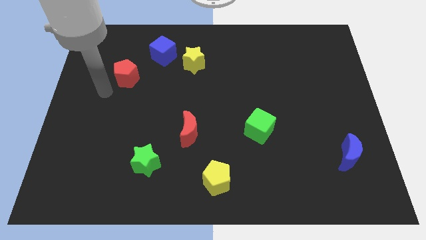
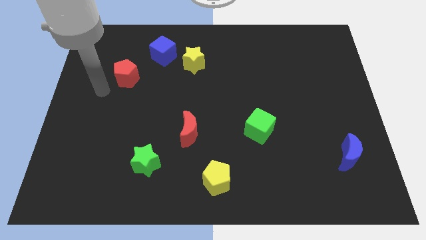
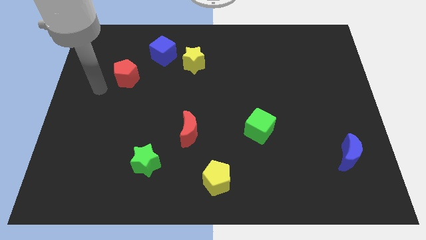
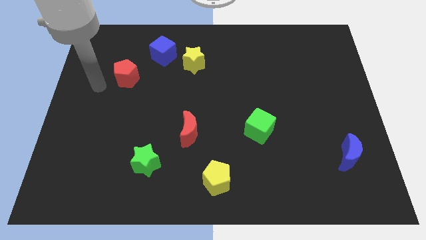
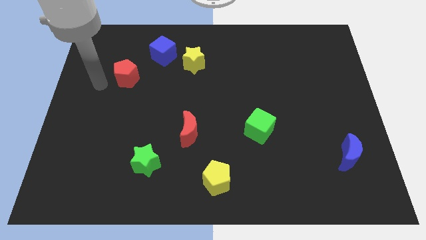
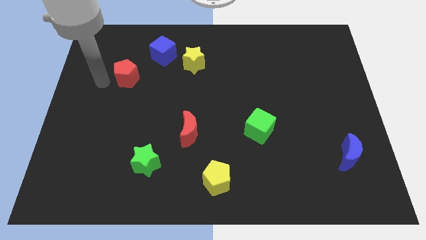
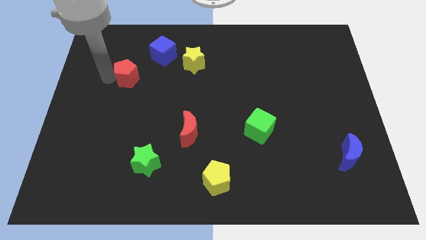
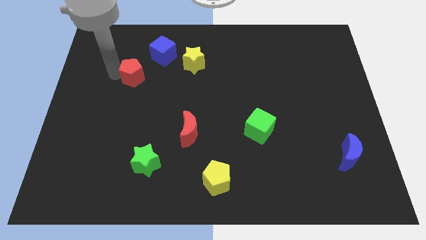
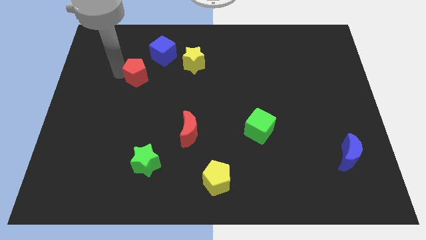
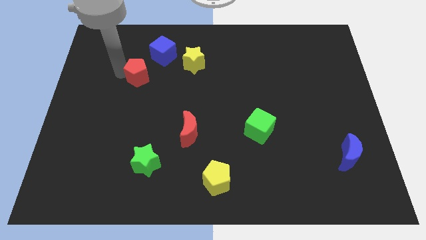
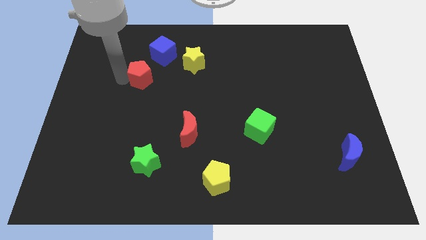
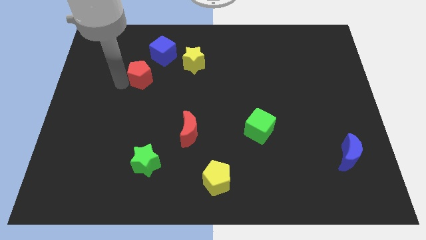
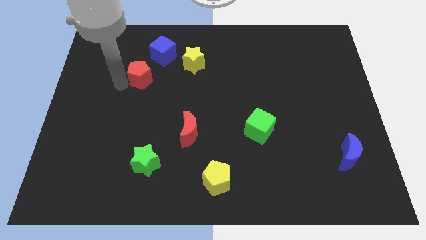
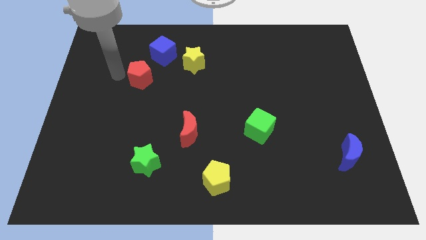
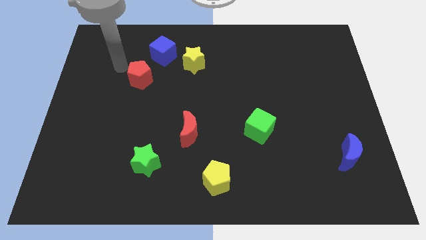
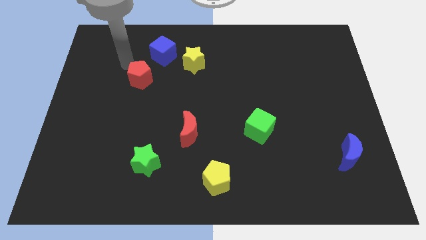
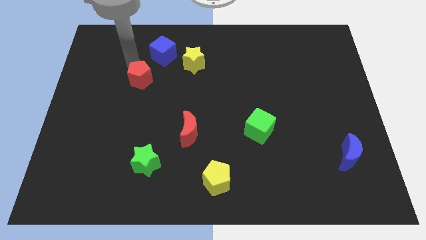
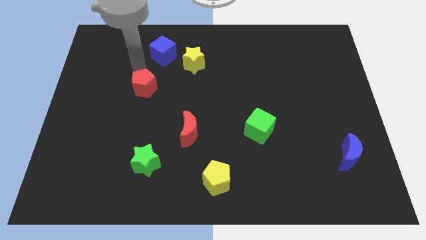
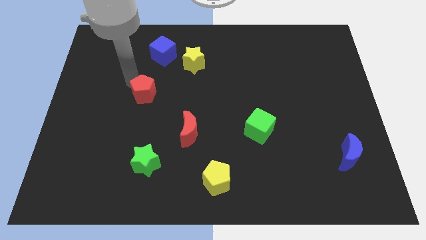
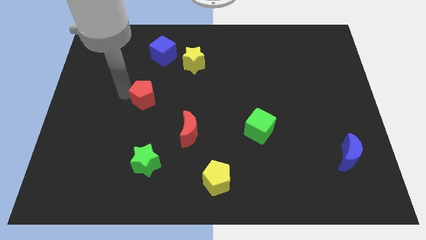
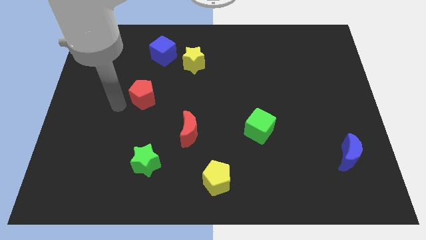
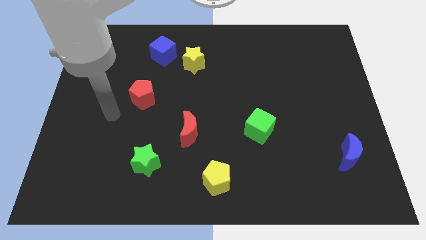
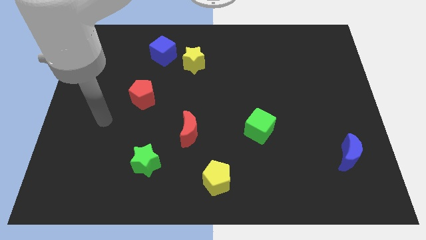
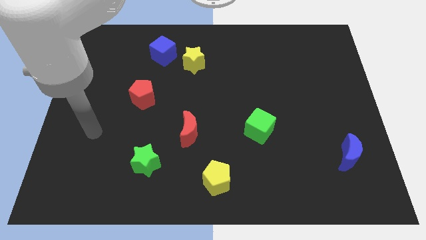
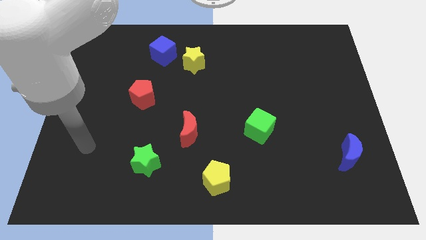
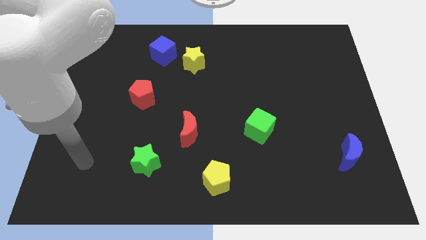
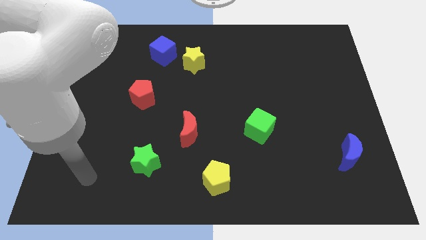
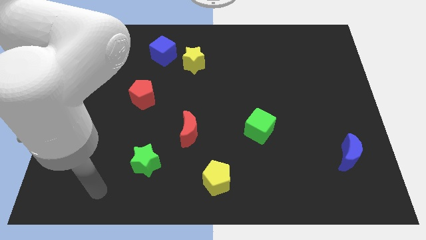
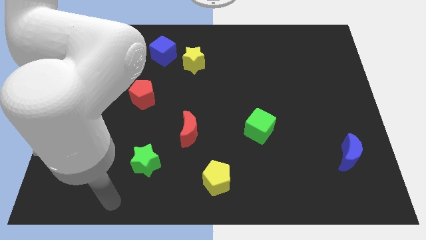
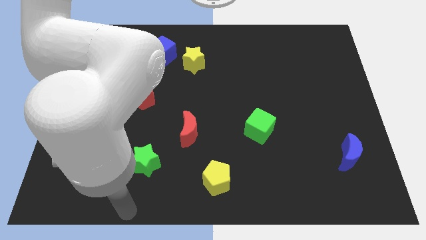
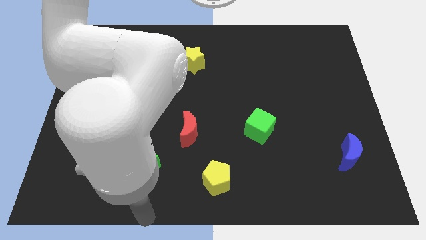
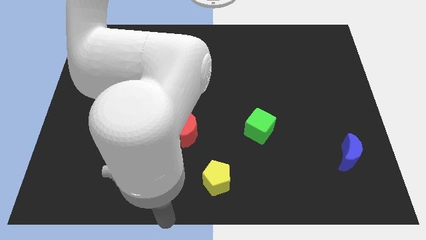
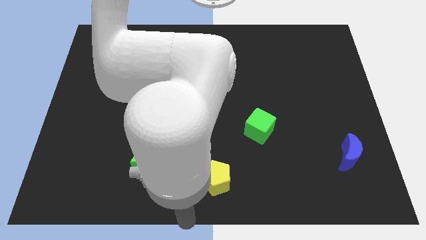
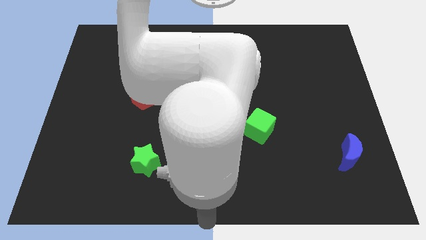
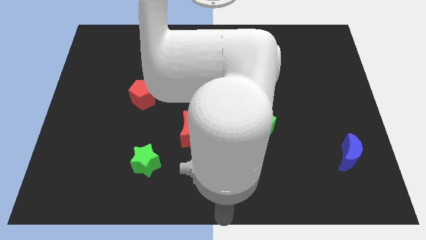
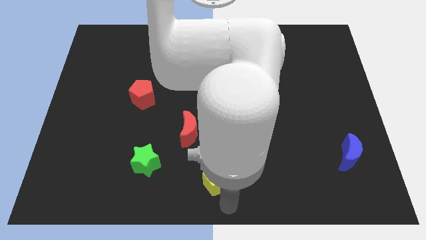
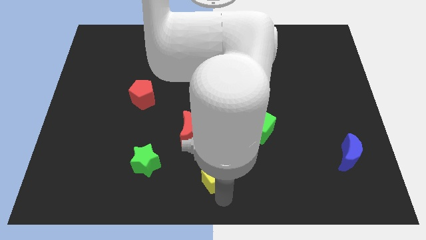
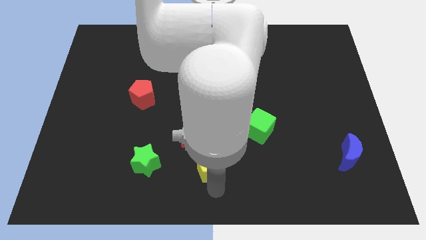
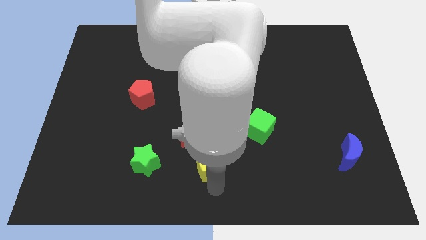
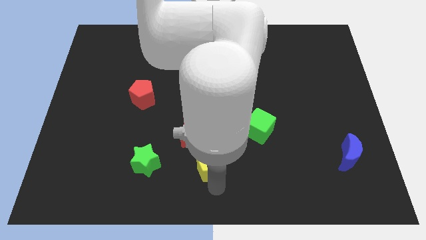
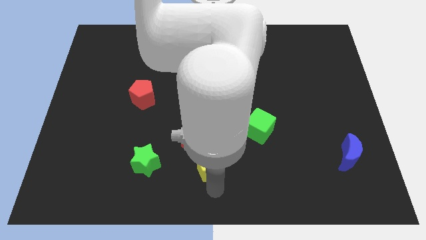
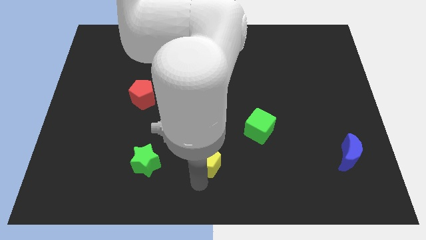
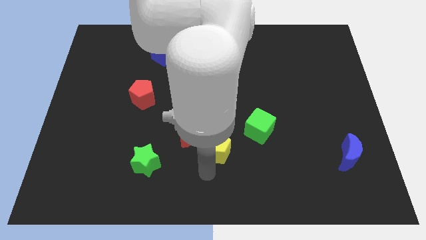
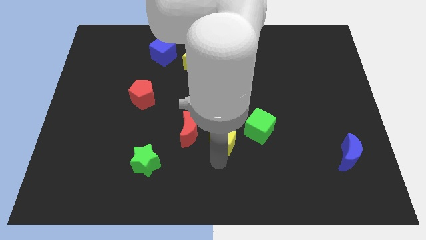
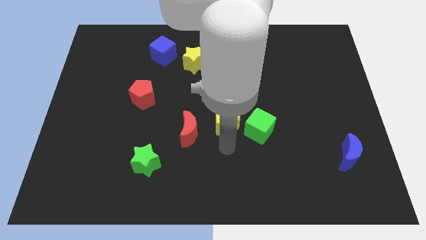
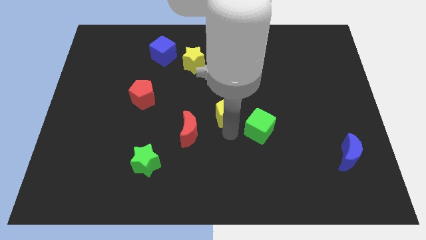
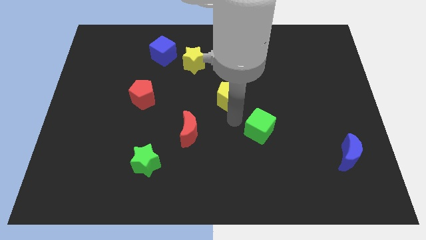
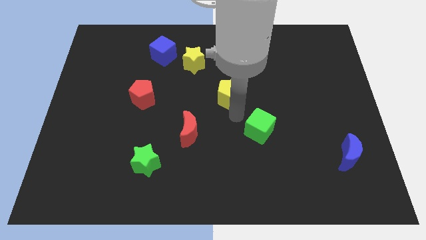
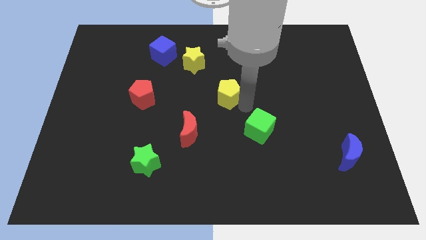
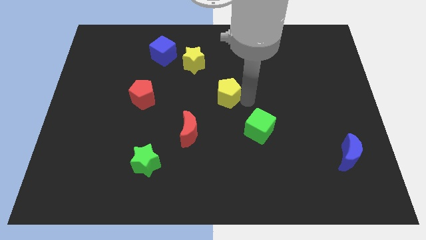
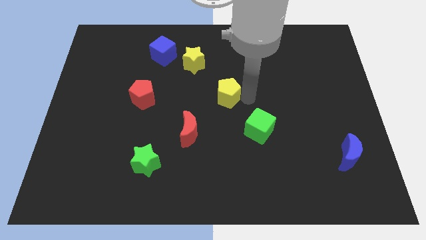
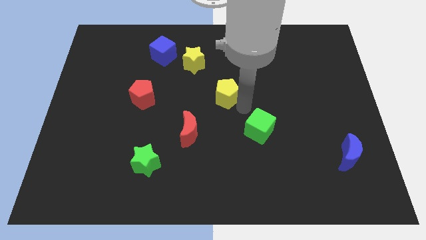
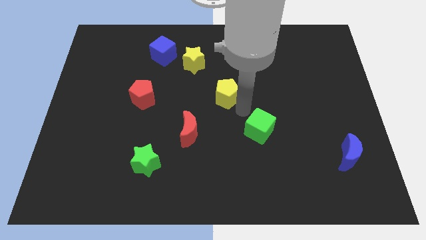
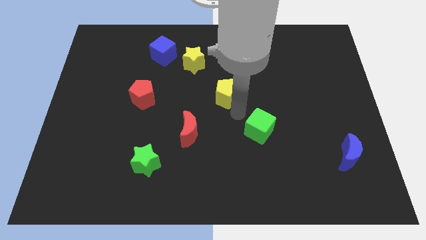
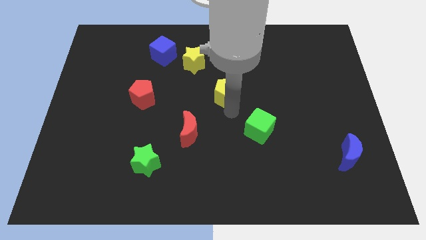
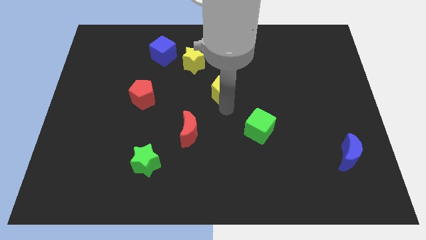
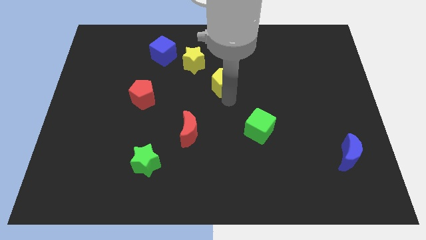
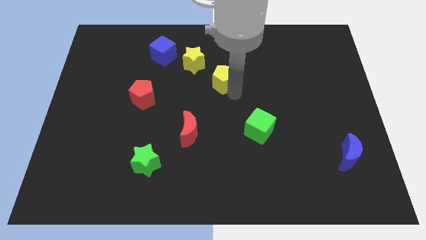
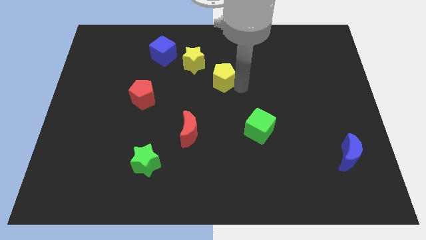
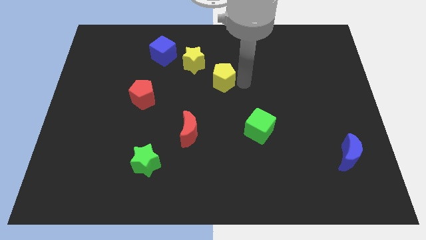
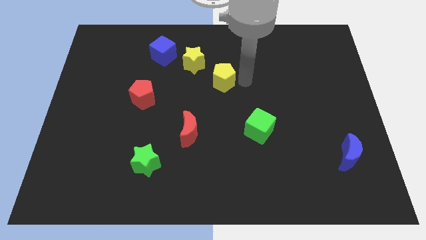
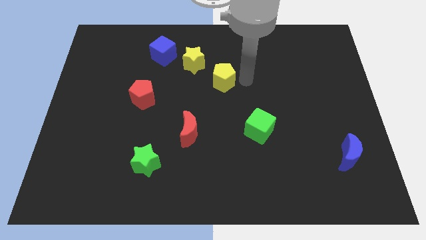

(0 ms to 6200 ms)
move the yellow pentagon to right of yellow star

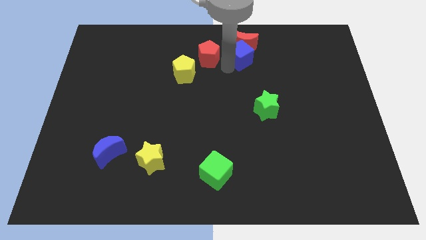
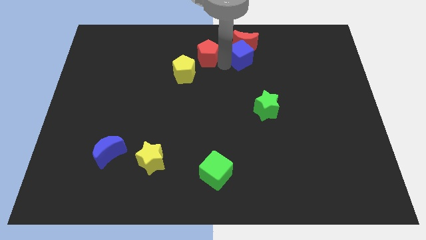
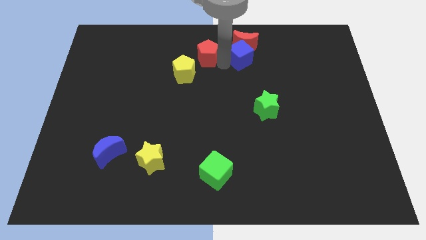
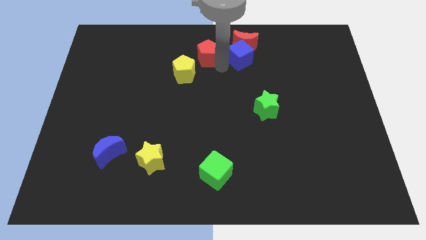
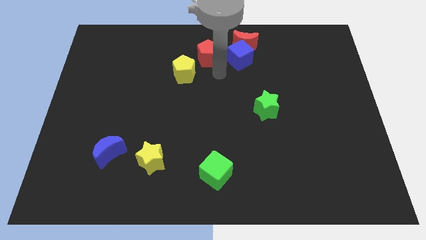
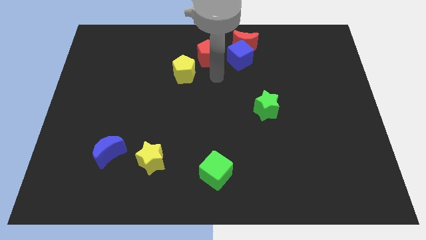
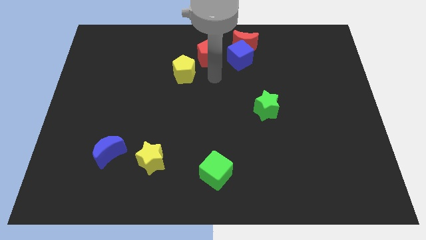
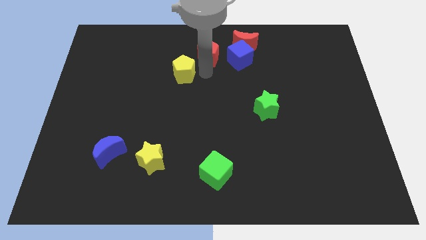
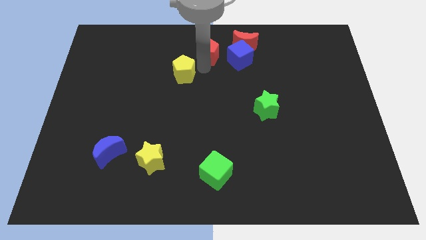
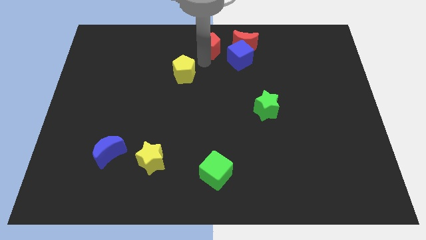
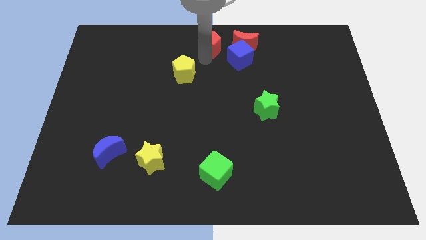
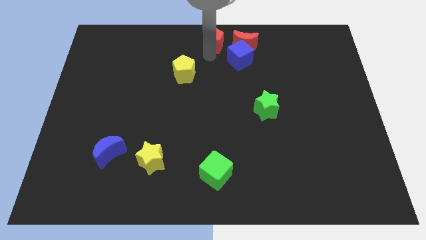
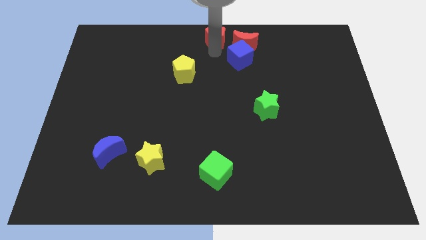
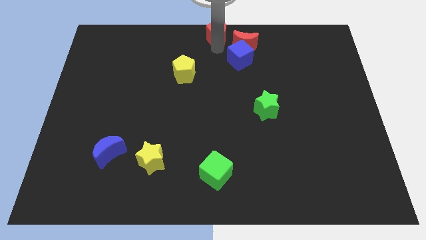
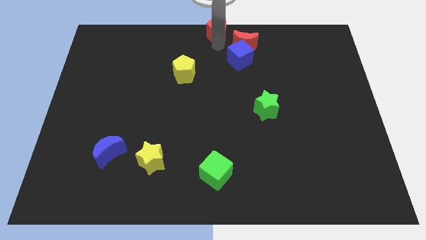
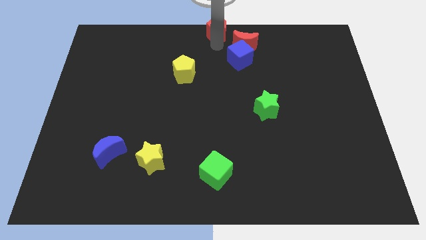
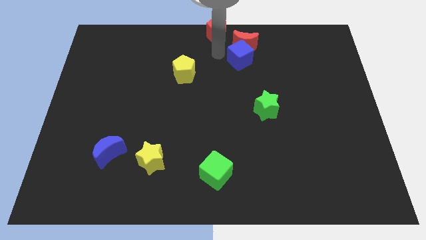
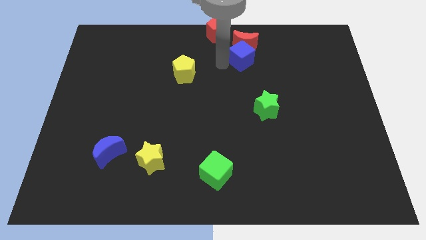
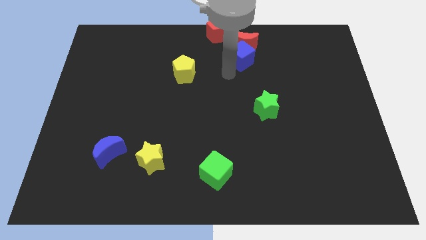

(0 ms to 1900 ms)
place the red pentagon at the top center of the board

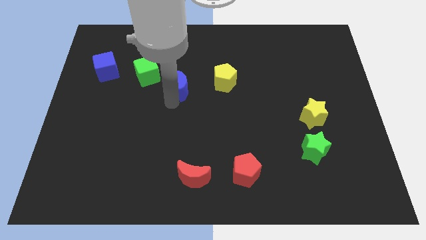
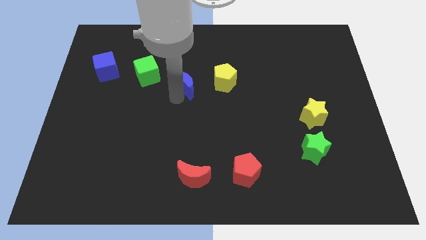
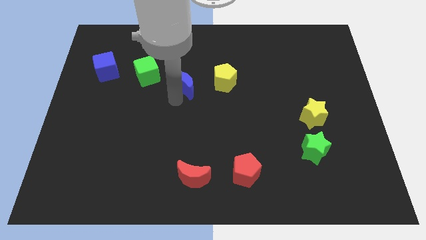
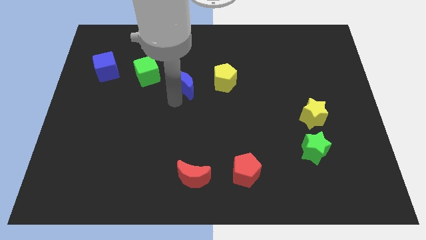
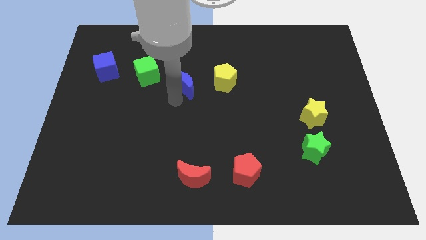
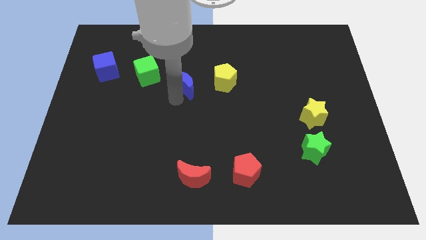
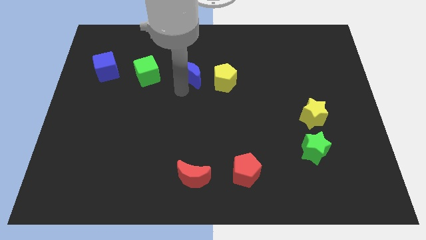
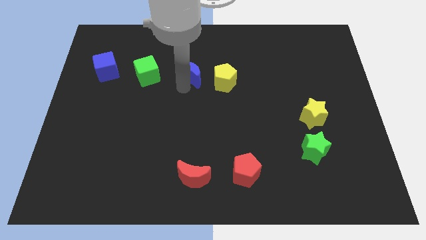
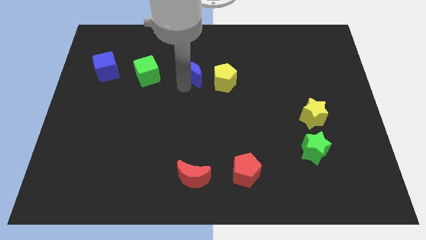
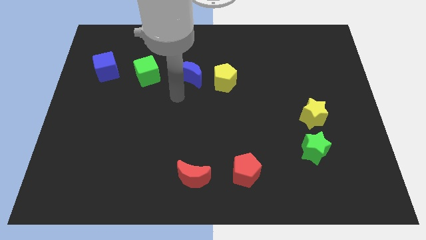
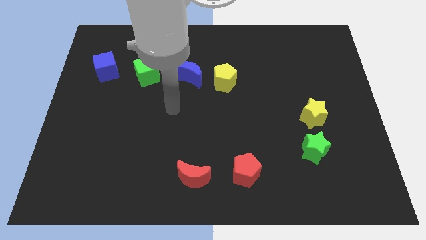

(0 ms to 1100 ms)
push the blue crescent in between the green cube and the yellow pentagon
